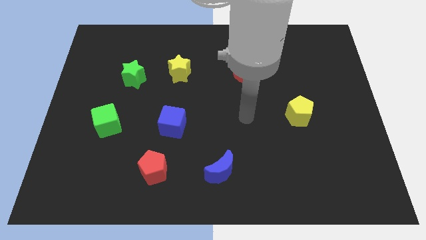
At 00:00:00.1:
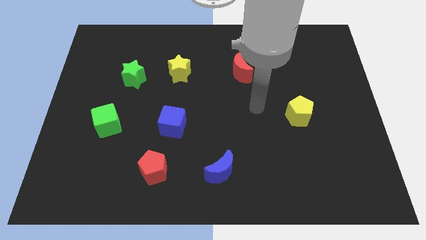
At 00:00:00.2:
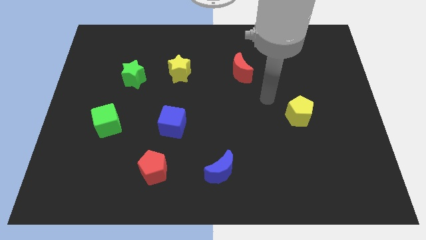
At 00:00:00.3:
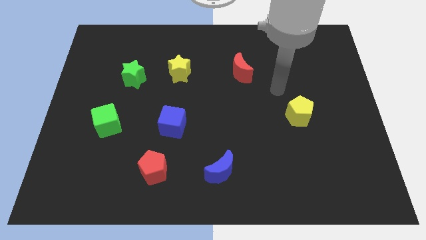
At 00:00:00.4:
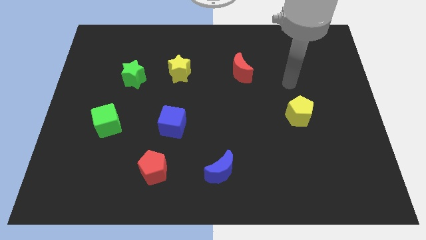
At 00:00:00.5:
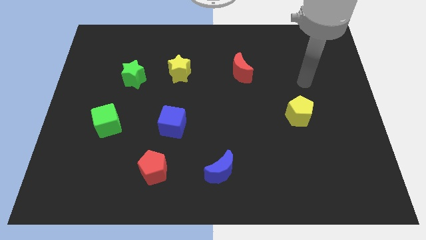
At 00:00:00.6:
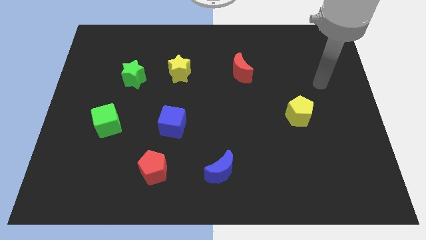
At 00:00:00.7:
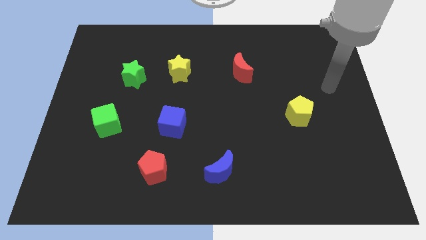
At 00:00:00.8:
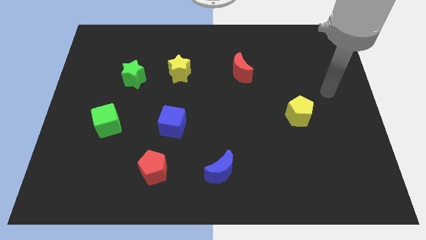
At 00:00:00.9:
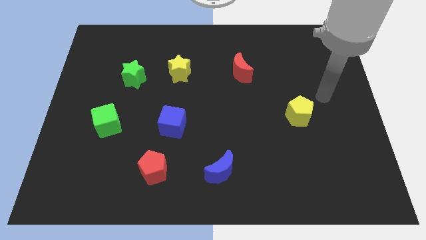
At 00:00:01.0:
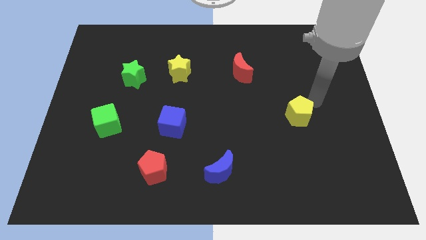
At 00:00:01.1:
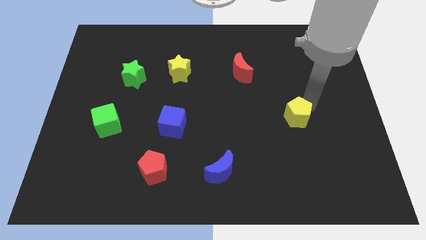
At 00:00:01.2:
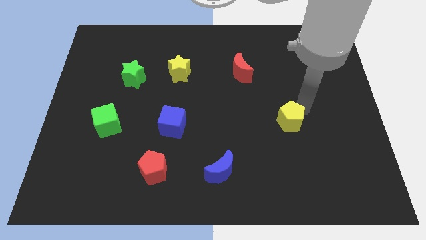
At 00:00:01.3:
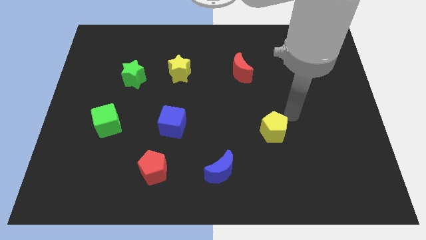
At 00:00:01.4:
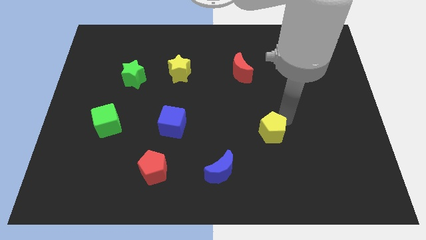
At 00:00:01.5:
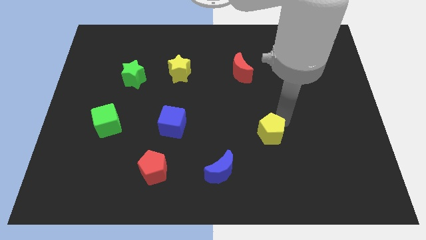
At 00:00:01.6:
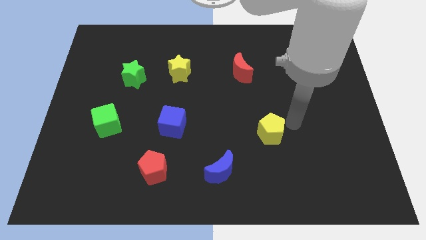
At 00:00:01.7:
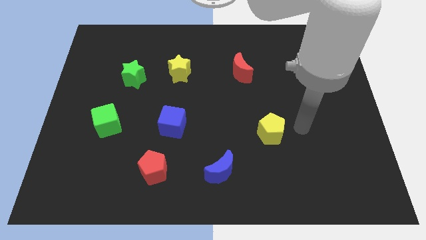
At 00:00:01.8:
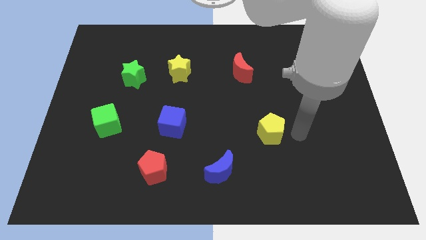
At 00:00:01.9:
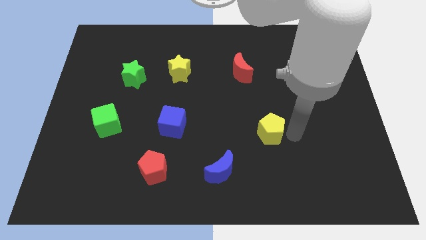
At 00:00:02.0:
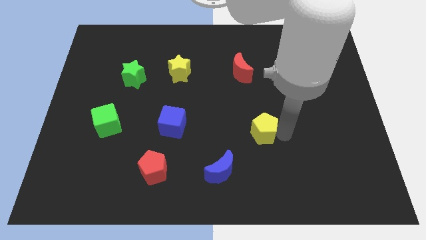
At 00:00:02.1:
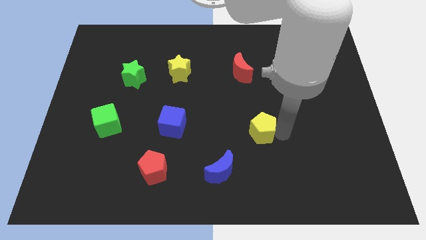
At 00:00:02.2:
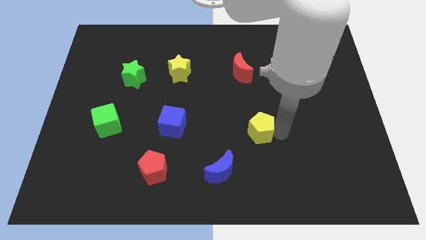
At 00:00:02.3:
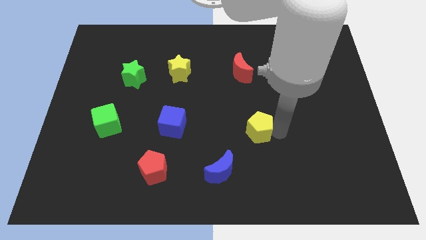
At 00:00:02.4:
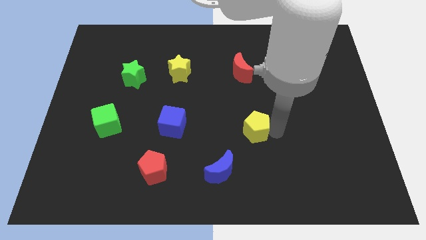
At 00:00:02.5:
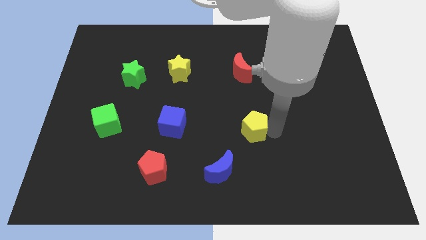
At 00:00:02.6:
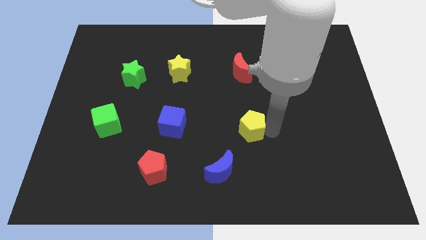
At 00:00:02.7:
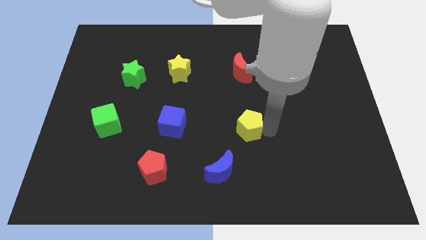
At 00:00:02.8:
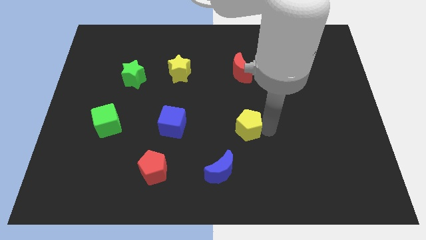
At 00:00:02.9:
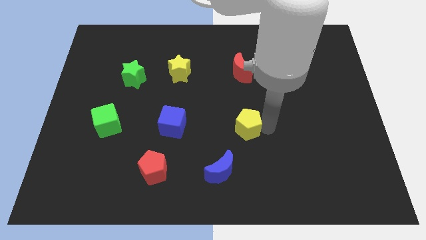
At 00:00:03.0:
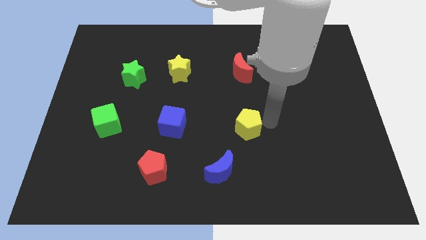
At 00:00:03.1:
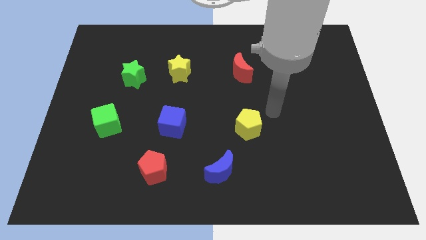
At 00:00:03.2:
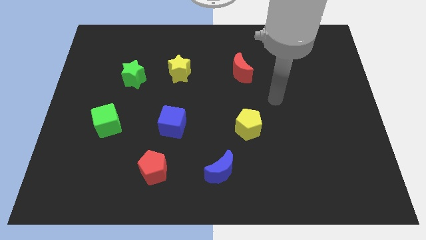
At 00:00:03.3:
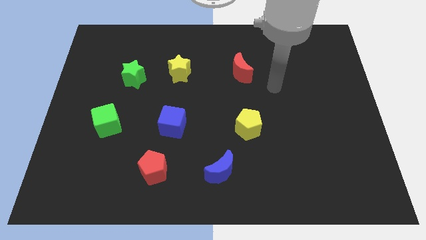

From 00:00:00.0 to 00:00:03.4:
move the yellow pentagon right of the blue cube

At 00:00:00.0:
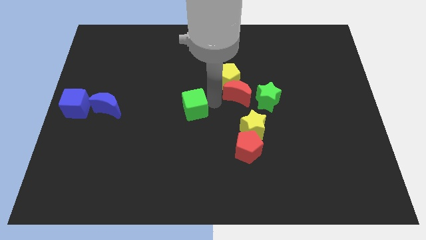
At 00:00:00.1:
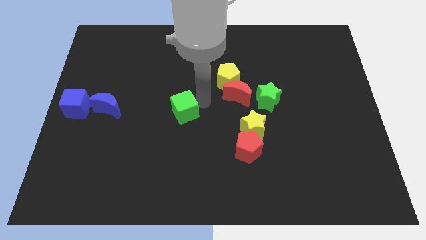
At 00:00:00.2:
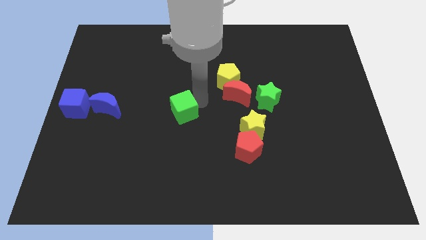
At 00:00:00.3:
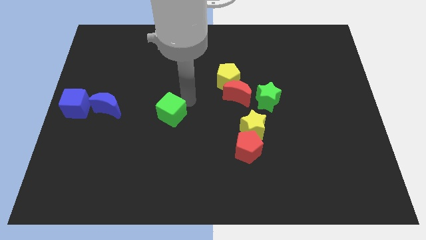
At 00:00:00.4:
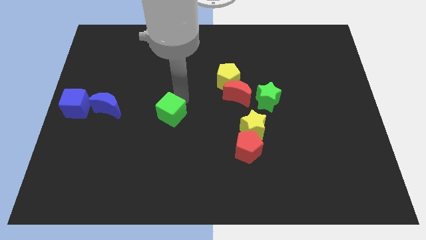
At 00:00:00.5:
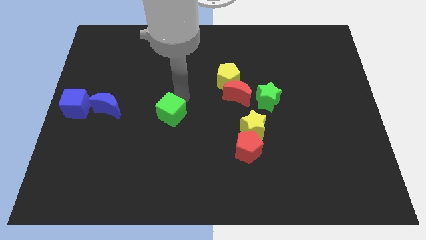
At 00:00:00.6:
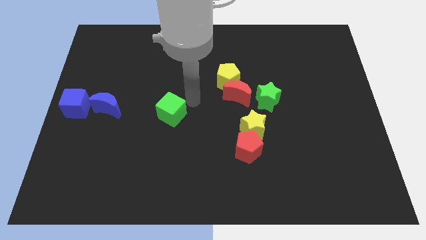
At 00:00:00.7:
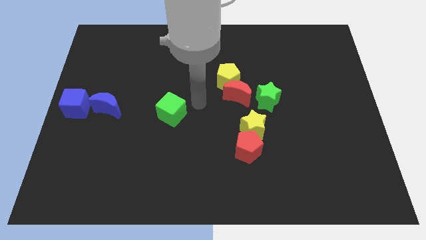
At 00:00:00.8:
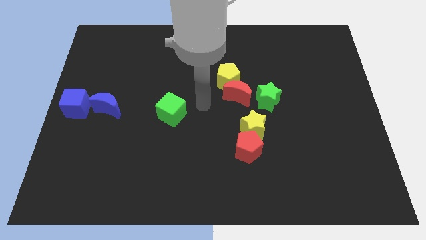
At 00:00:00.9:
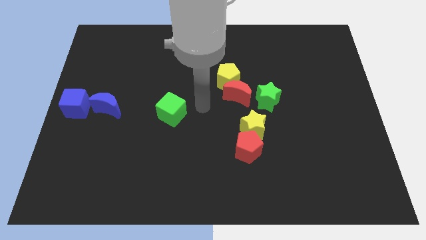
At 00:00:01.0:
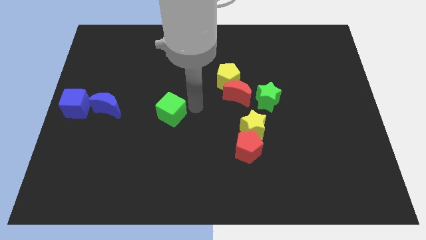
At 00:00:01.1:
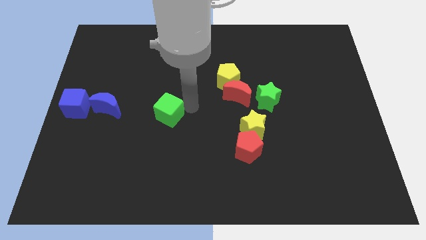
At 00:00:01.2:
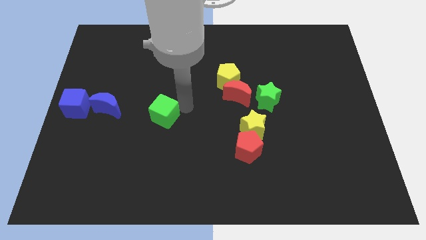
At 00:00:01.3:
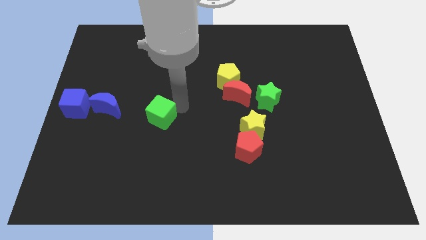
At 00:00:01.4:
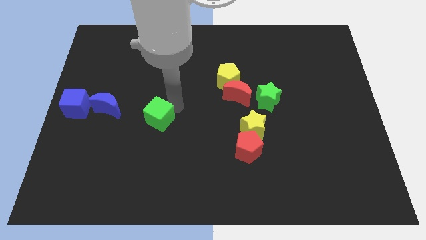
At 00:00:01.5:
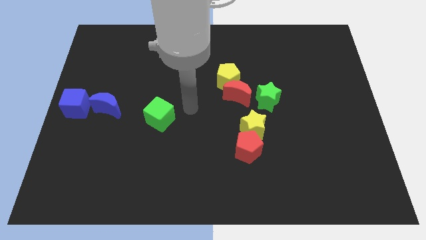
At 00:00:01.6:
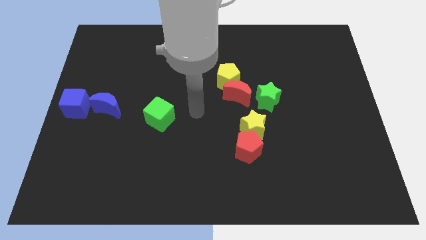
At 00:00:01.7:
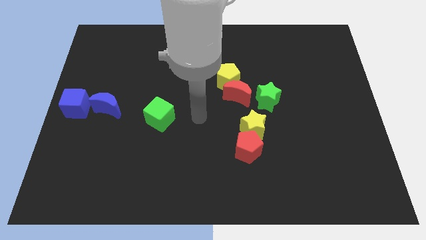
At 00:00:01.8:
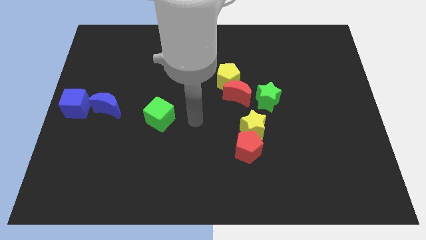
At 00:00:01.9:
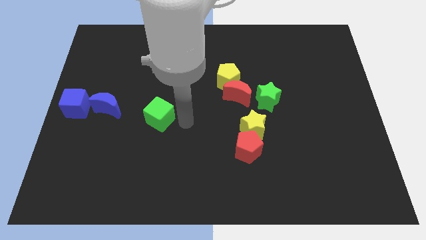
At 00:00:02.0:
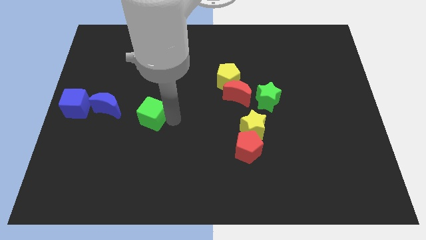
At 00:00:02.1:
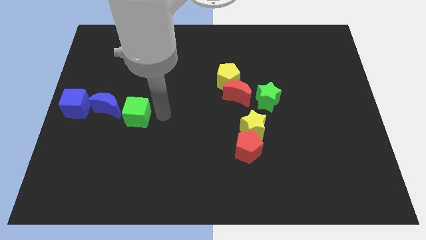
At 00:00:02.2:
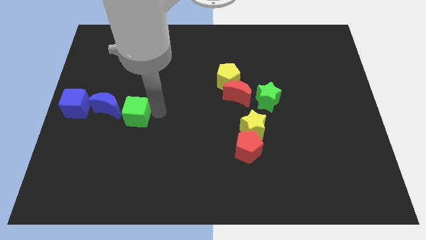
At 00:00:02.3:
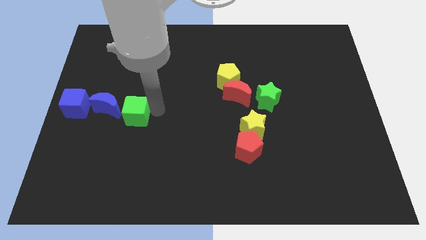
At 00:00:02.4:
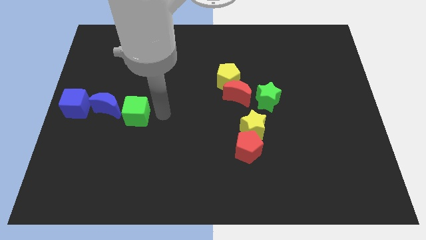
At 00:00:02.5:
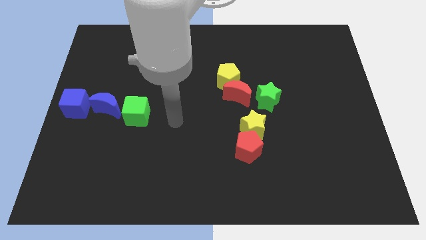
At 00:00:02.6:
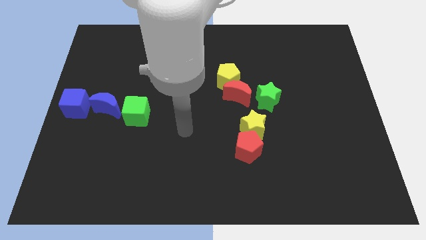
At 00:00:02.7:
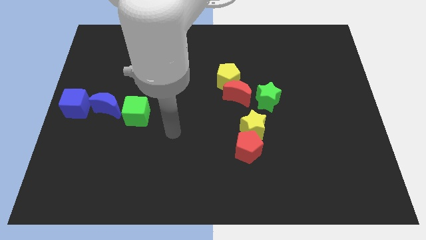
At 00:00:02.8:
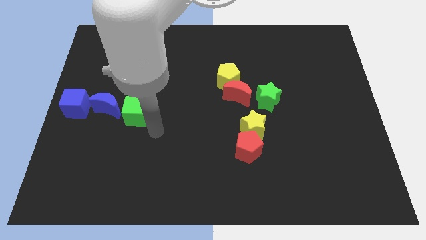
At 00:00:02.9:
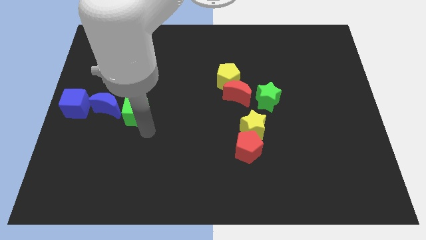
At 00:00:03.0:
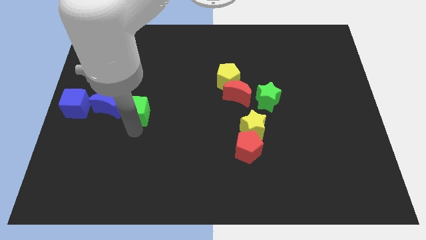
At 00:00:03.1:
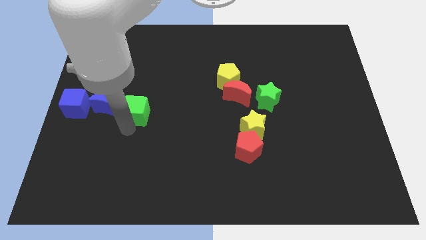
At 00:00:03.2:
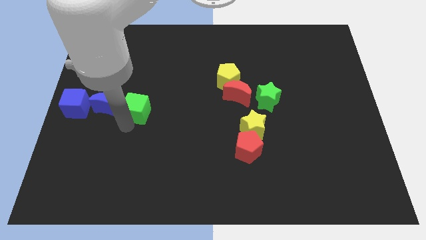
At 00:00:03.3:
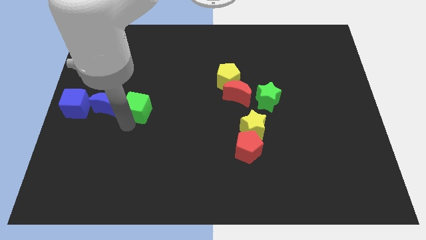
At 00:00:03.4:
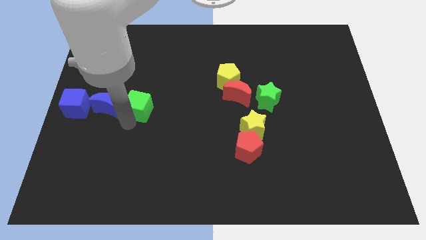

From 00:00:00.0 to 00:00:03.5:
place the green cube to the right of the blue crescent

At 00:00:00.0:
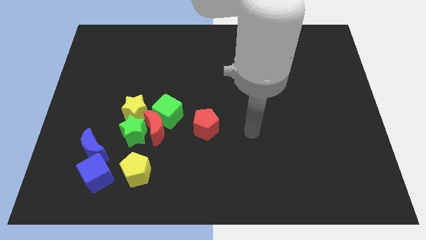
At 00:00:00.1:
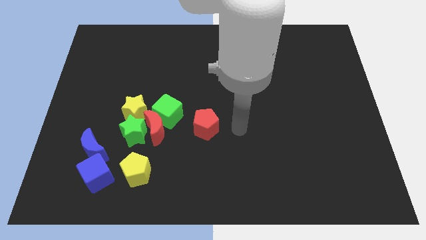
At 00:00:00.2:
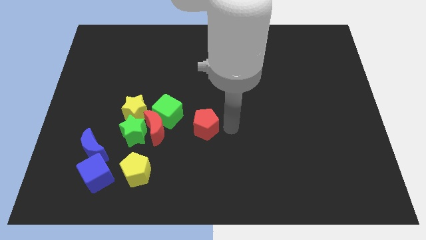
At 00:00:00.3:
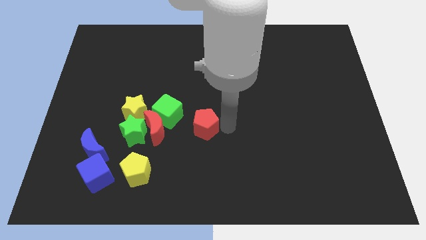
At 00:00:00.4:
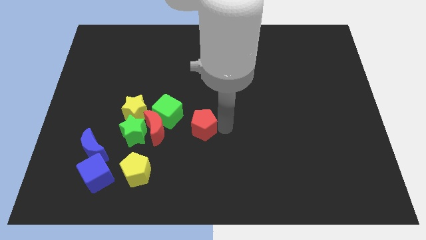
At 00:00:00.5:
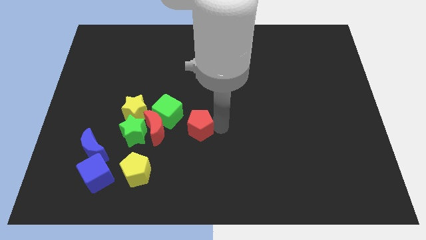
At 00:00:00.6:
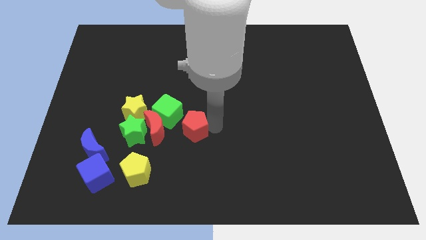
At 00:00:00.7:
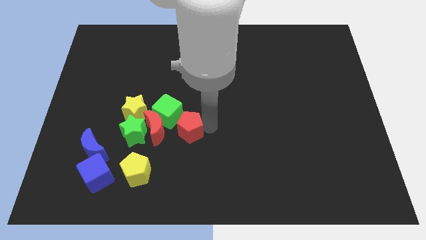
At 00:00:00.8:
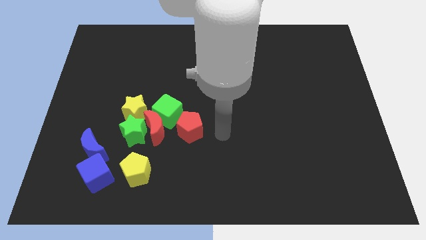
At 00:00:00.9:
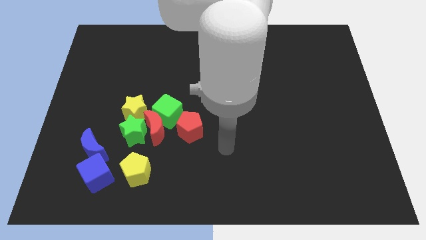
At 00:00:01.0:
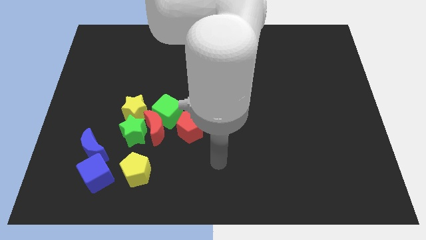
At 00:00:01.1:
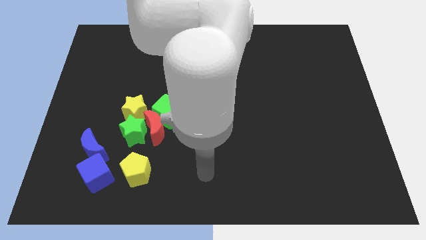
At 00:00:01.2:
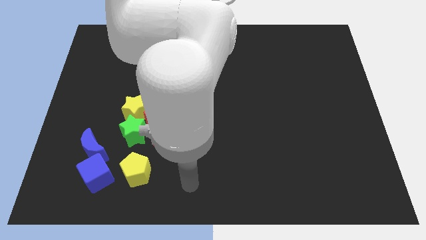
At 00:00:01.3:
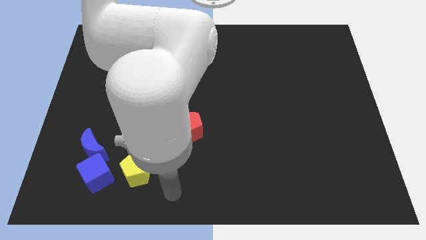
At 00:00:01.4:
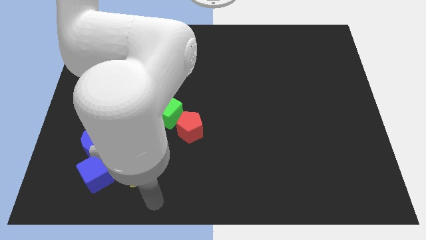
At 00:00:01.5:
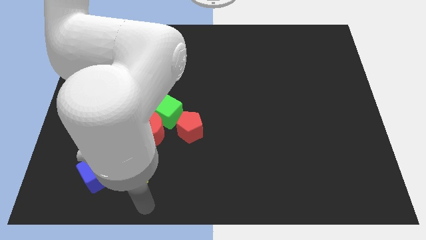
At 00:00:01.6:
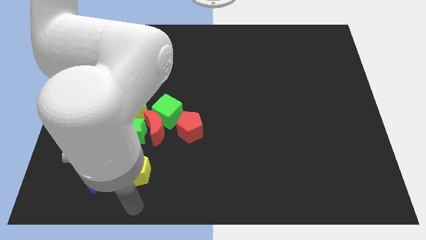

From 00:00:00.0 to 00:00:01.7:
place the red pentagon to the bottom right of the green cube

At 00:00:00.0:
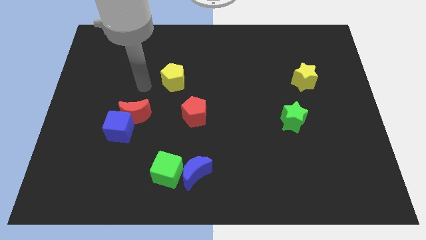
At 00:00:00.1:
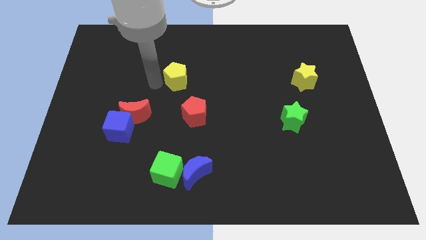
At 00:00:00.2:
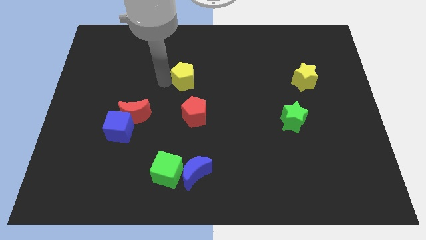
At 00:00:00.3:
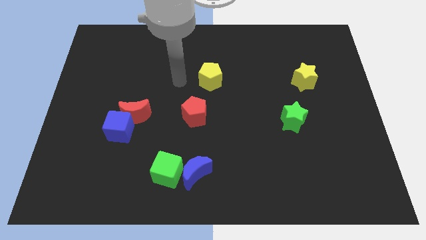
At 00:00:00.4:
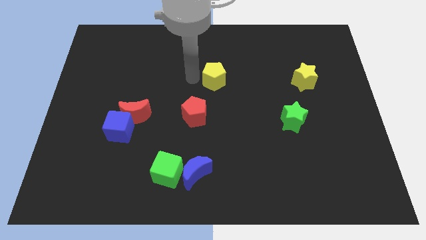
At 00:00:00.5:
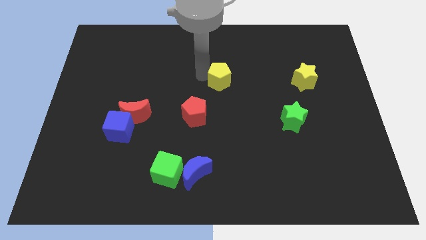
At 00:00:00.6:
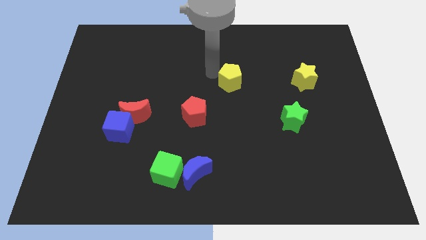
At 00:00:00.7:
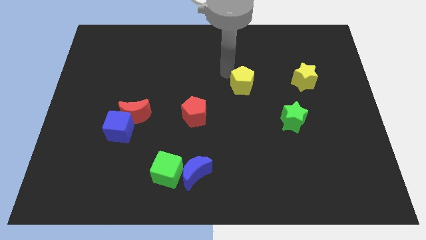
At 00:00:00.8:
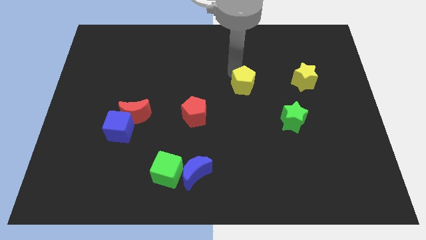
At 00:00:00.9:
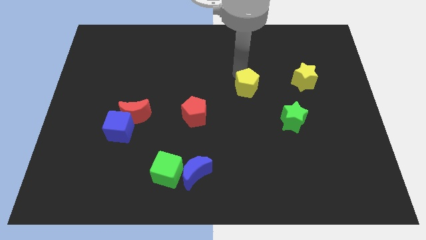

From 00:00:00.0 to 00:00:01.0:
move the yellow pentagon to the left of the yellow star
